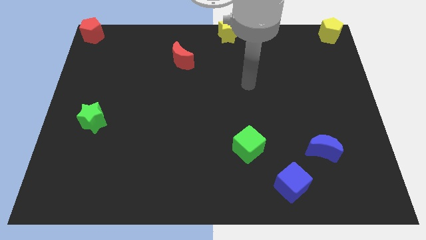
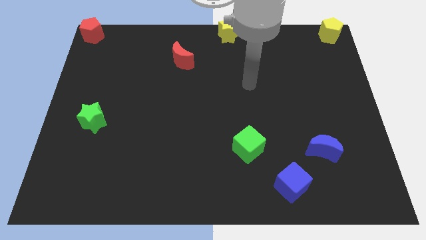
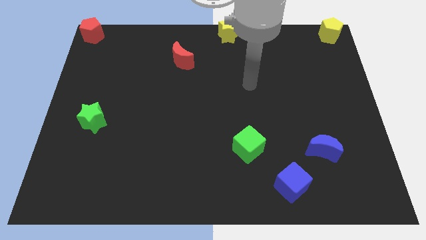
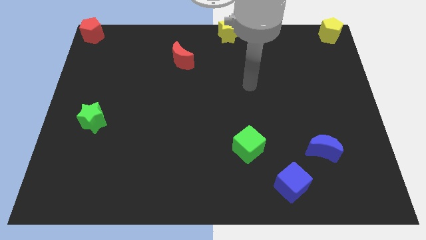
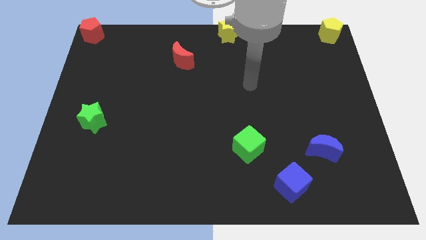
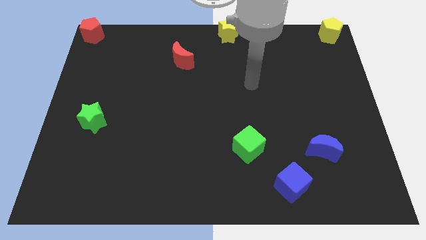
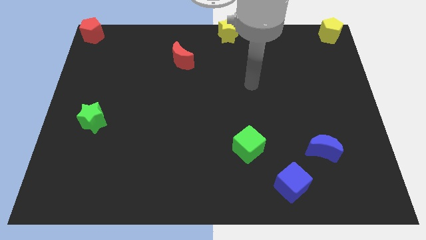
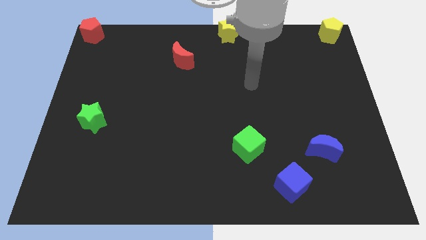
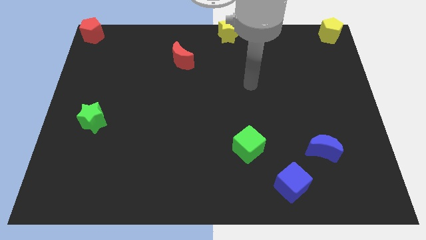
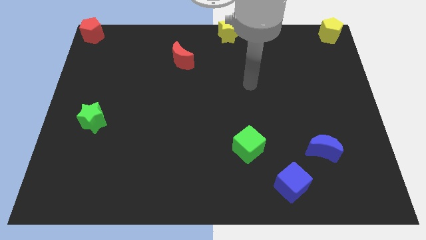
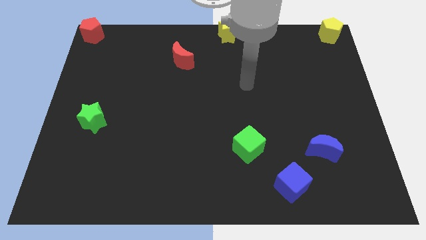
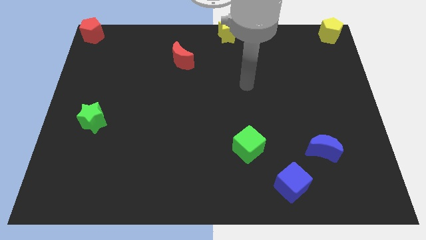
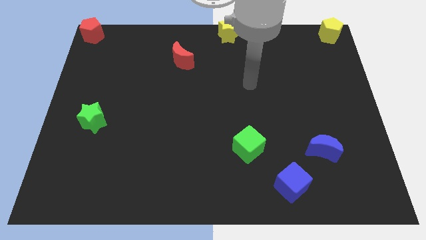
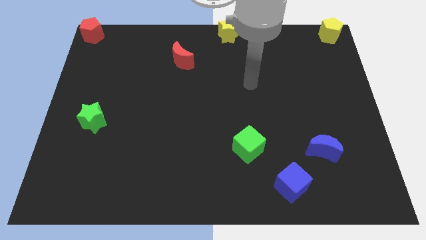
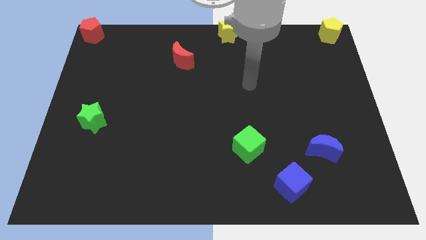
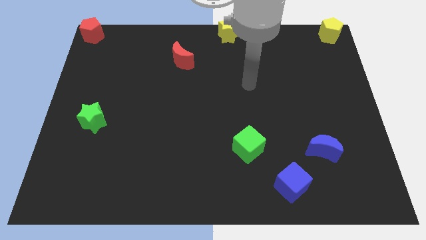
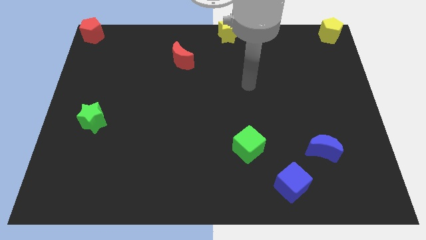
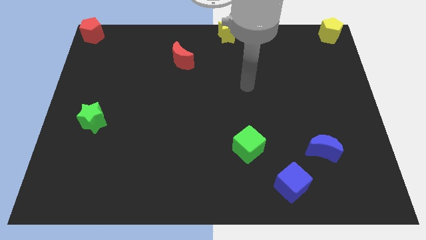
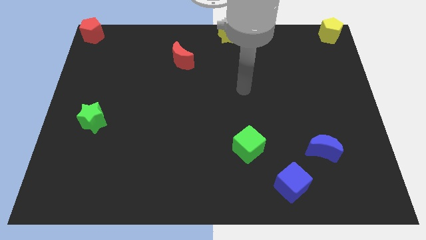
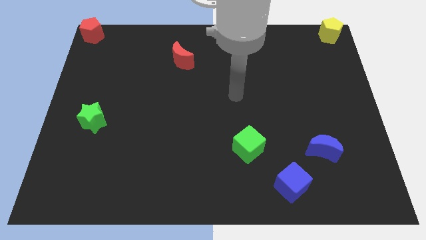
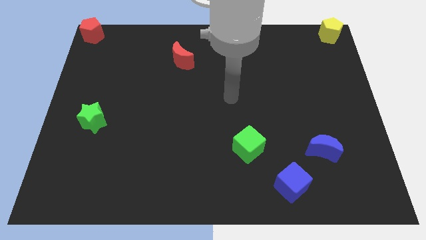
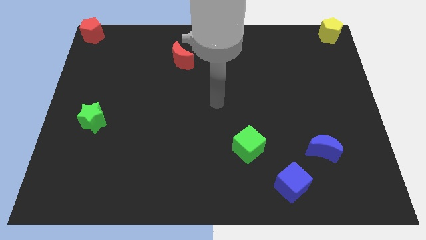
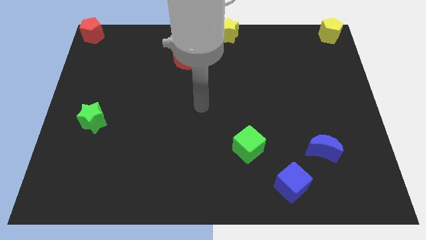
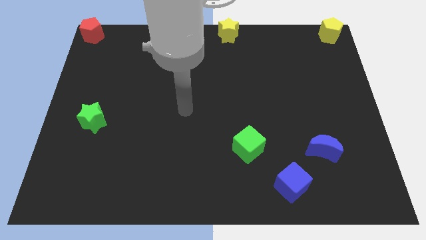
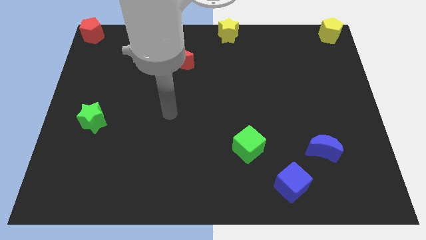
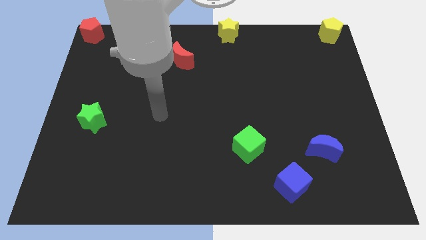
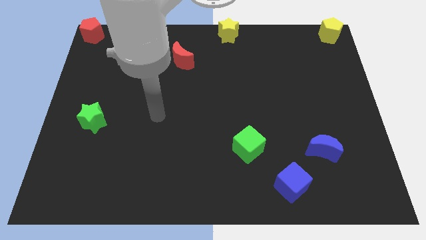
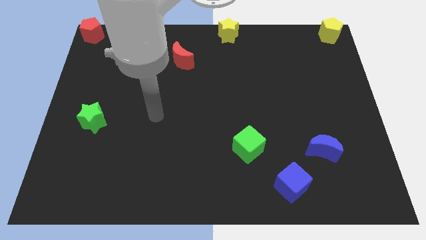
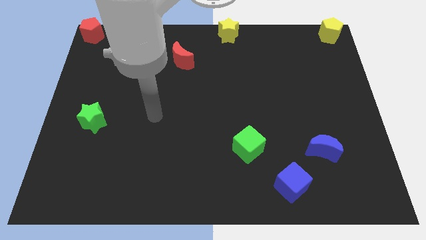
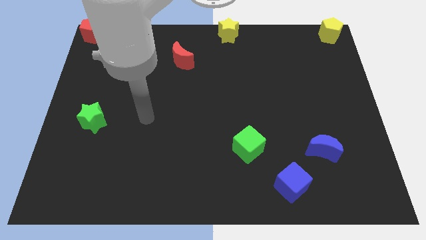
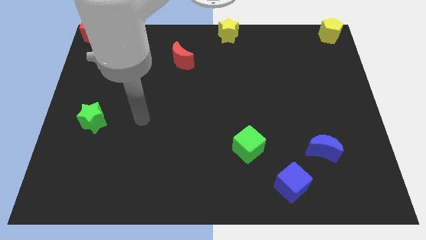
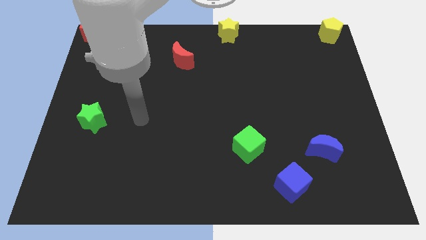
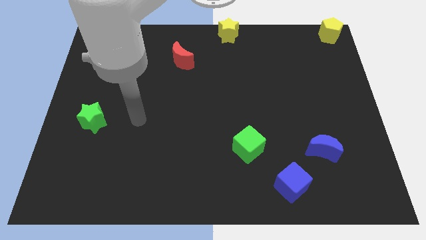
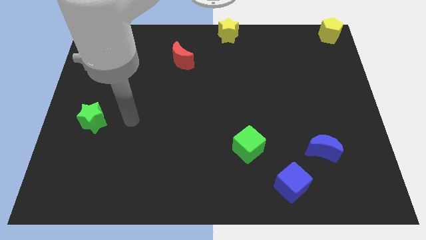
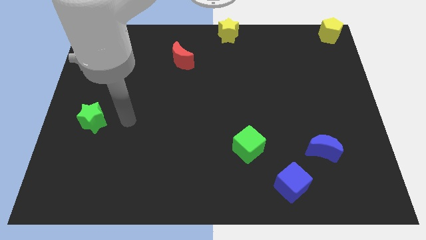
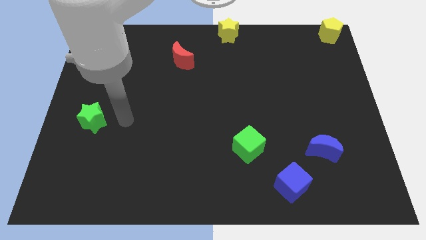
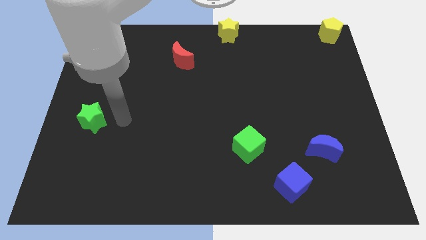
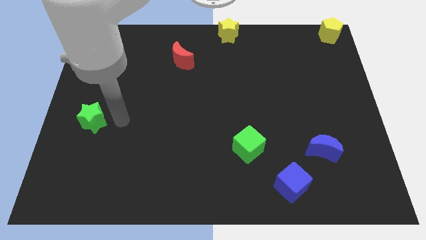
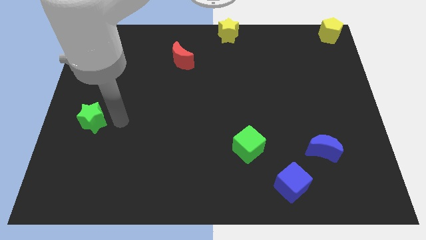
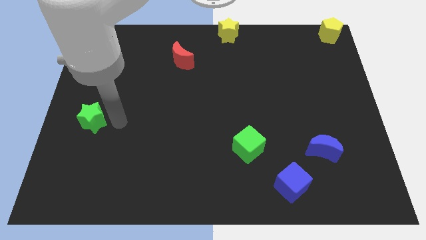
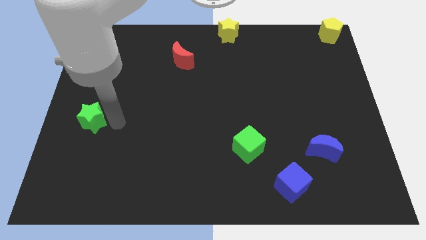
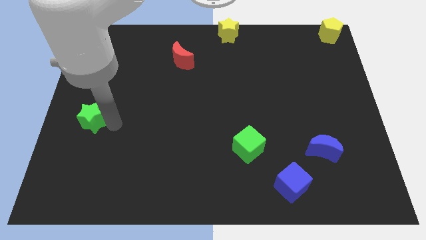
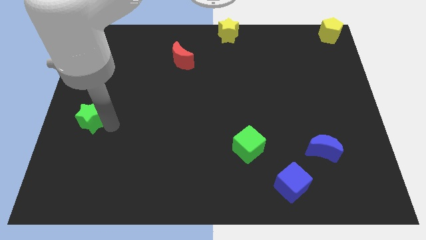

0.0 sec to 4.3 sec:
place your hand right to the green star

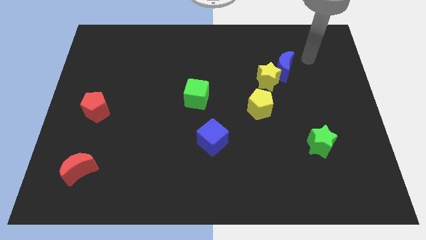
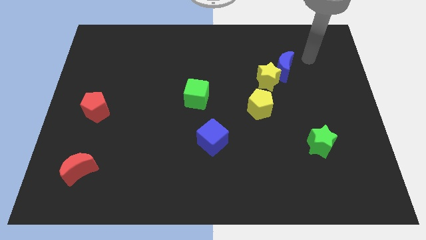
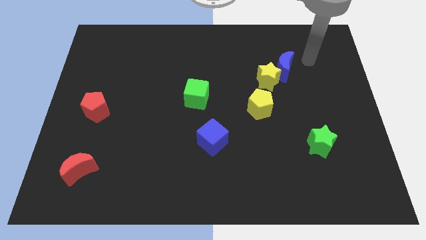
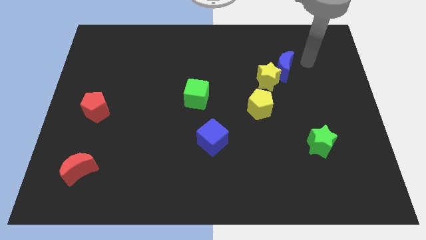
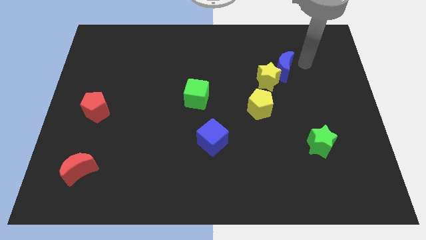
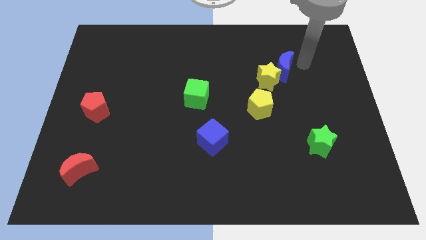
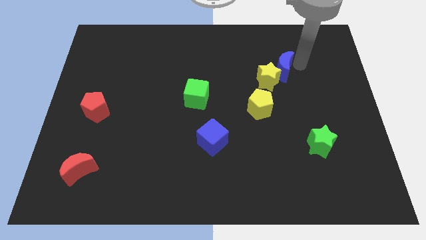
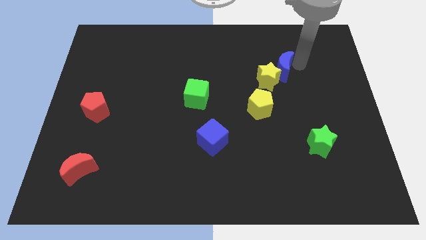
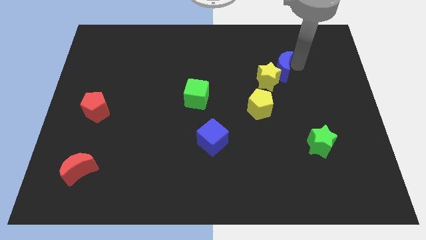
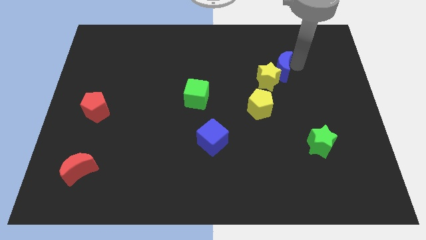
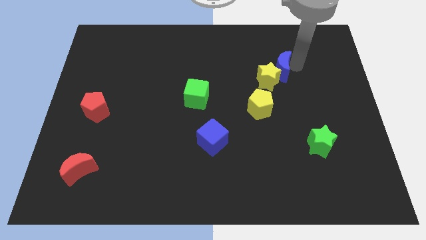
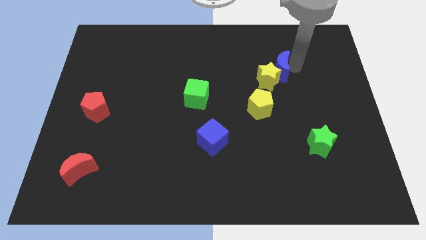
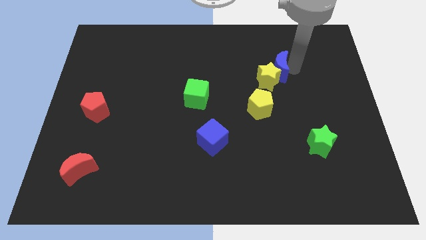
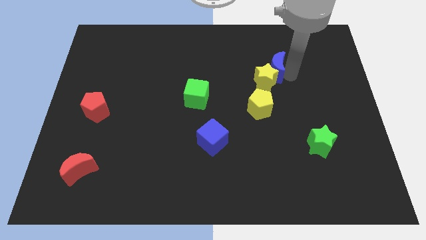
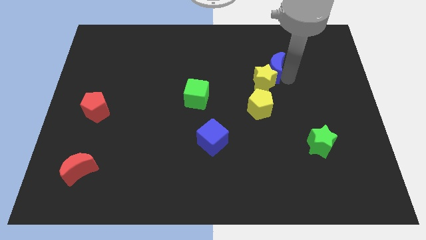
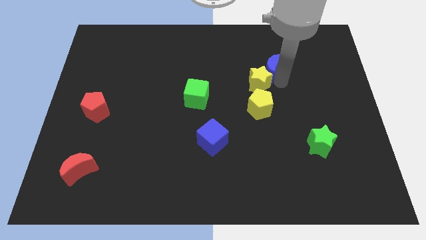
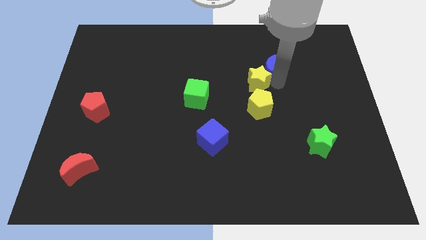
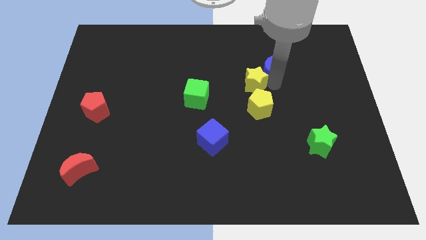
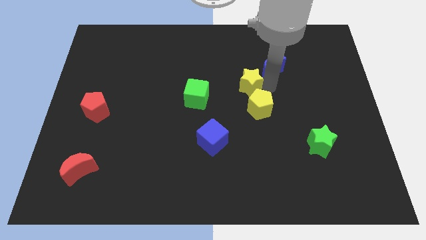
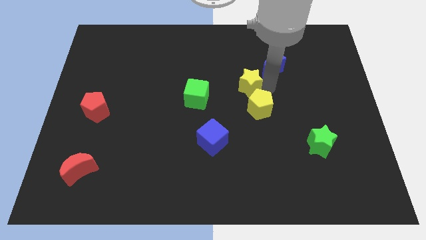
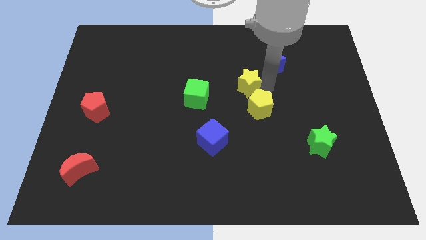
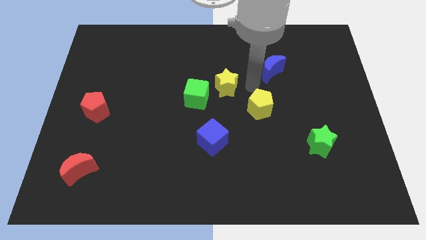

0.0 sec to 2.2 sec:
separate the yellow star and blue crescent

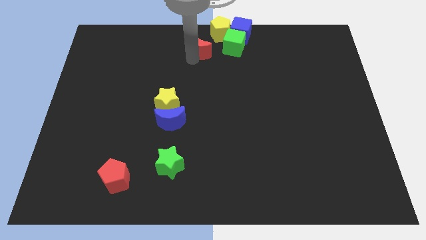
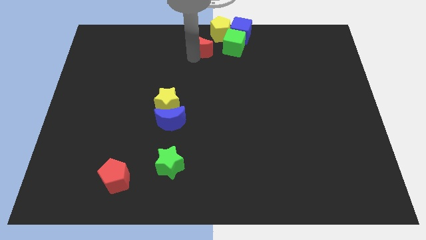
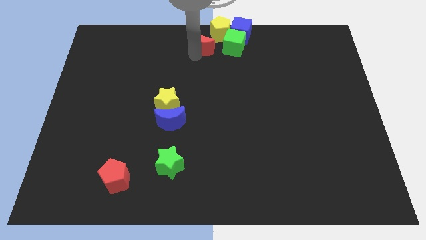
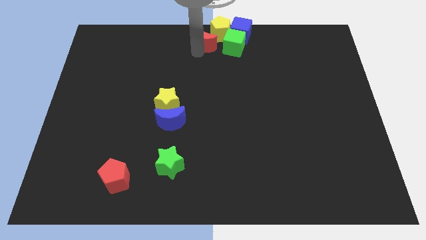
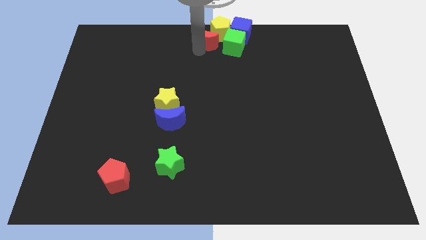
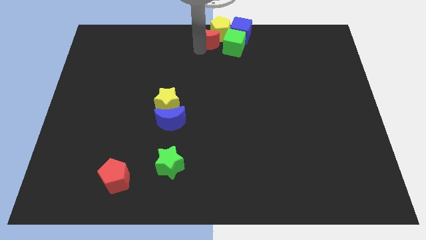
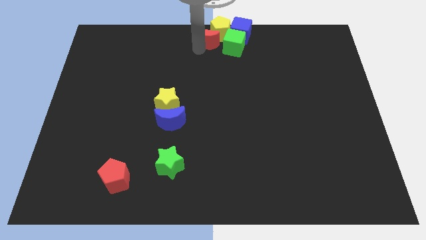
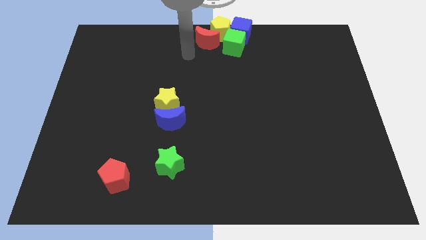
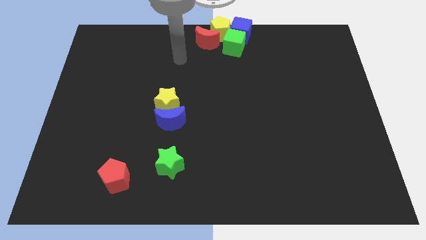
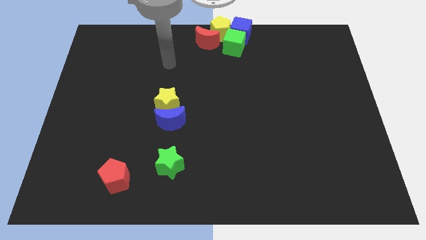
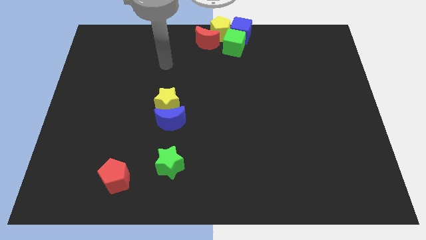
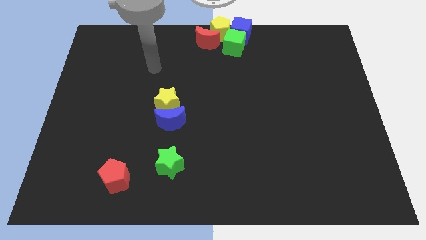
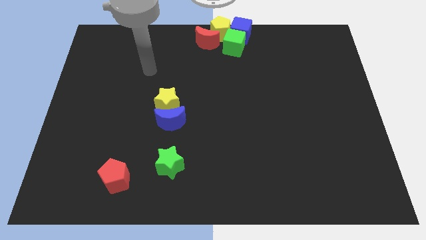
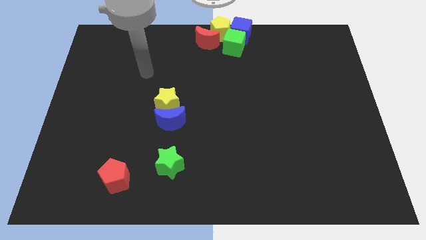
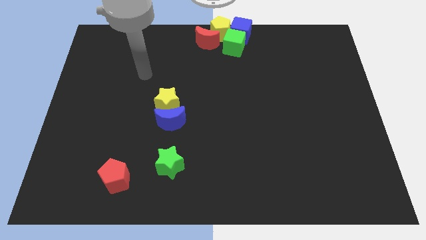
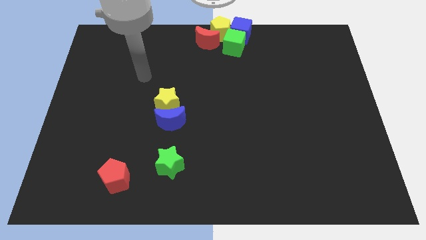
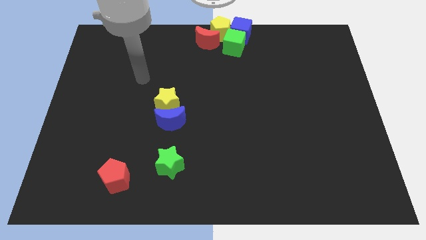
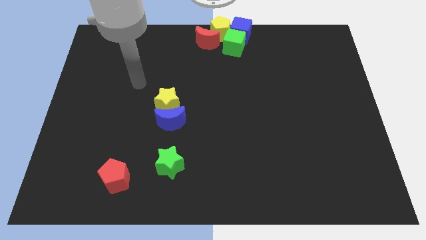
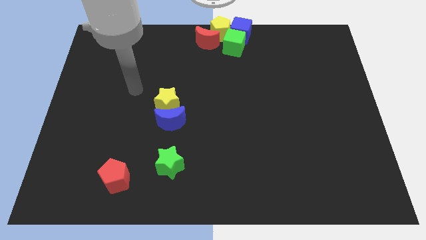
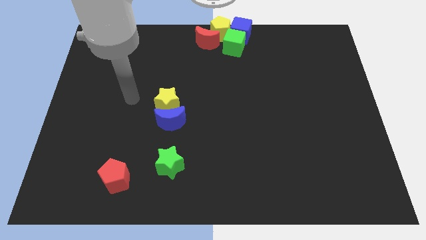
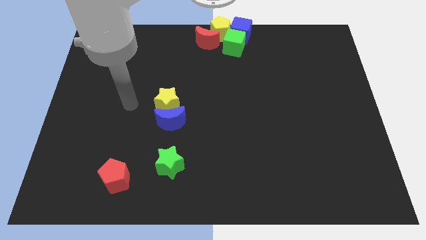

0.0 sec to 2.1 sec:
push red moon close to the yellow pentagon

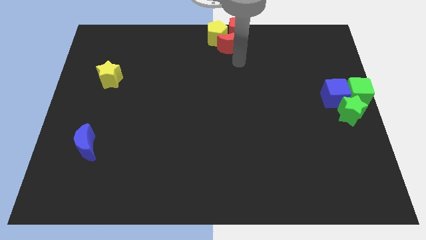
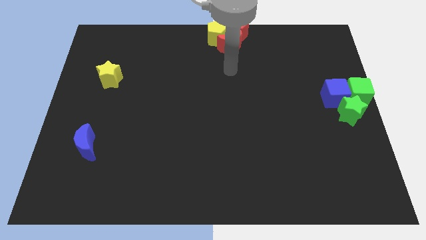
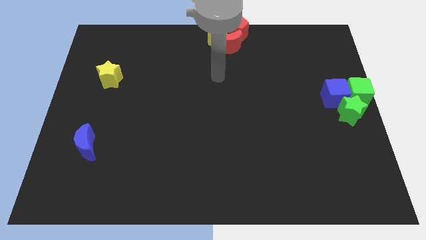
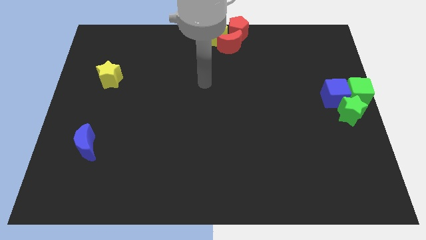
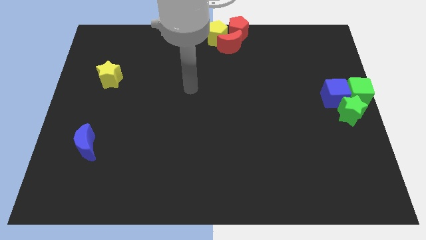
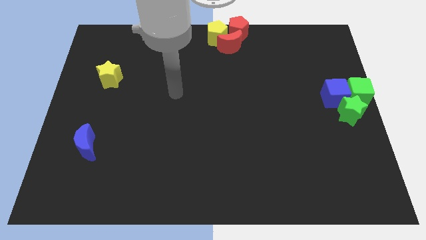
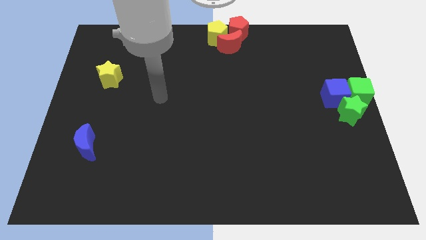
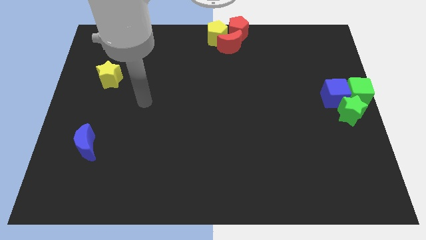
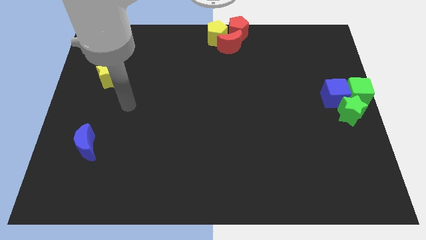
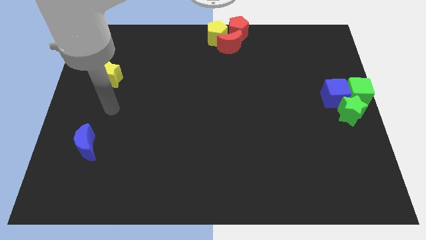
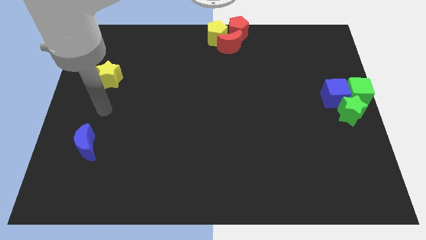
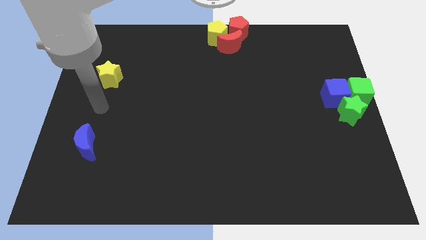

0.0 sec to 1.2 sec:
point your hand at the bottom side of the yellow star
